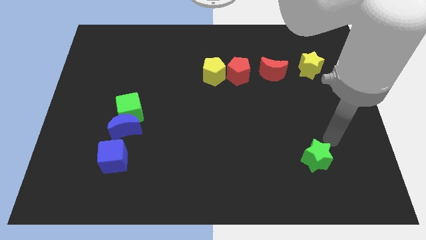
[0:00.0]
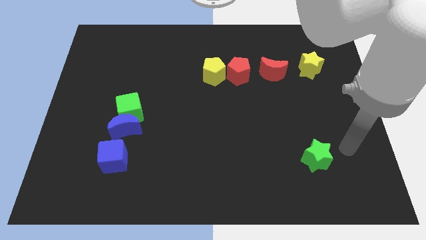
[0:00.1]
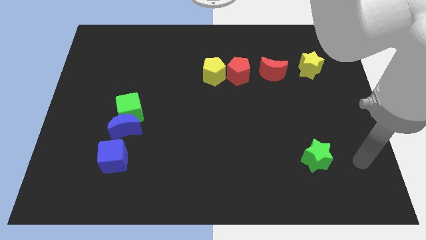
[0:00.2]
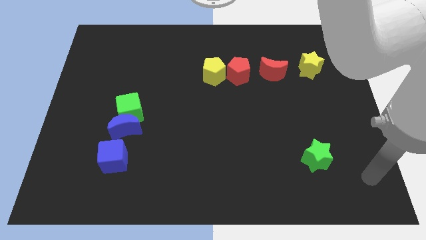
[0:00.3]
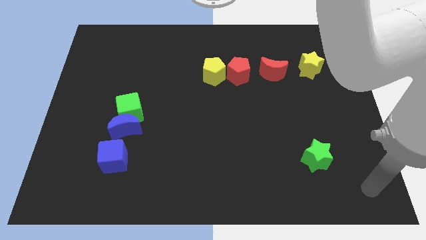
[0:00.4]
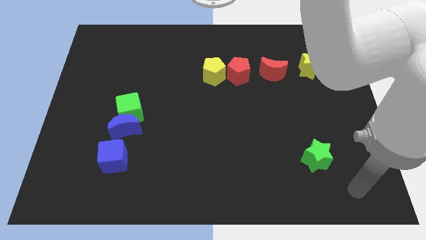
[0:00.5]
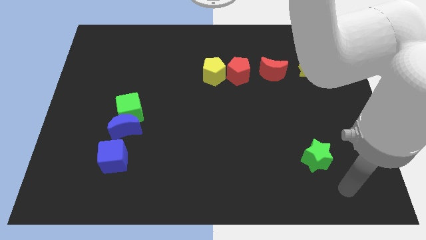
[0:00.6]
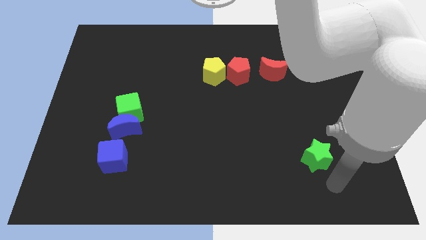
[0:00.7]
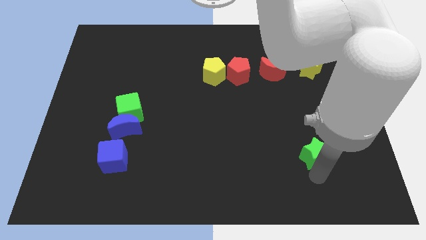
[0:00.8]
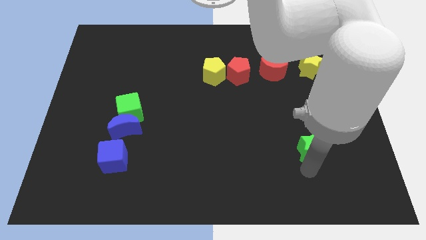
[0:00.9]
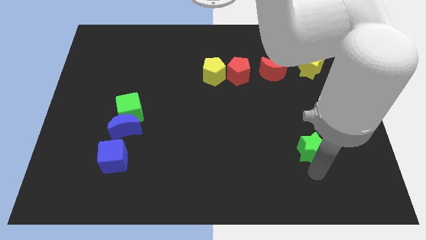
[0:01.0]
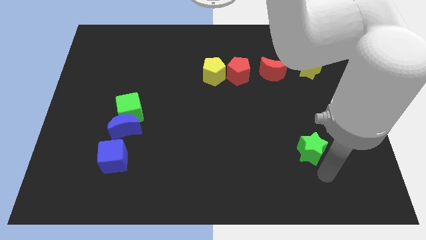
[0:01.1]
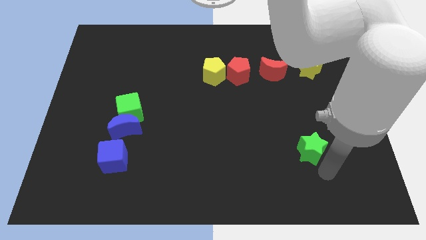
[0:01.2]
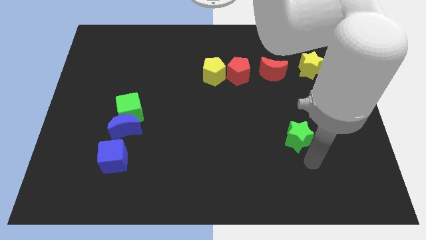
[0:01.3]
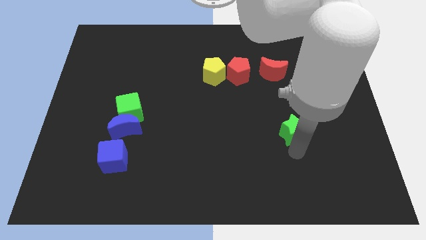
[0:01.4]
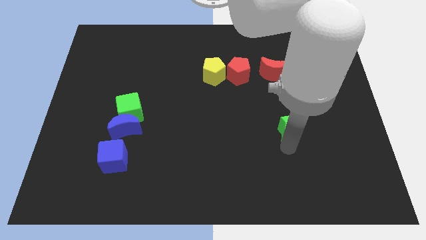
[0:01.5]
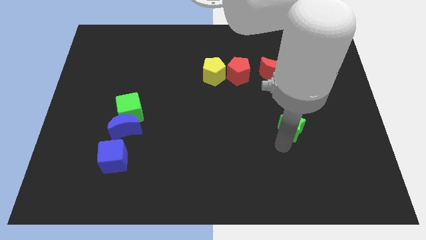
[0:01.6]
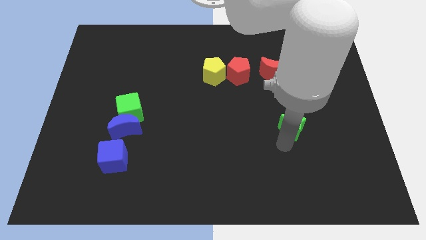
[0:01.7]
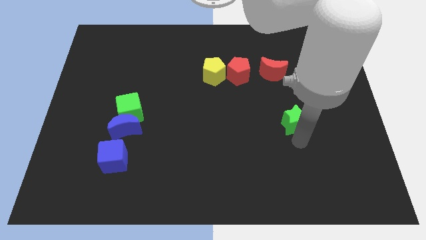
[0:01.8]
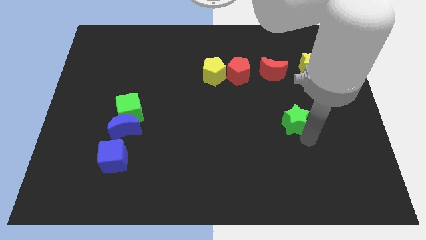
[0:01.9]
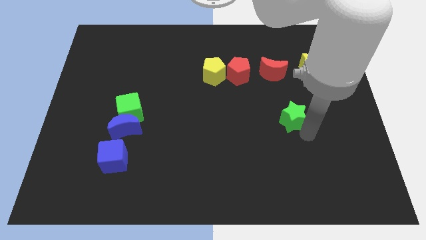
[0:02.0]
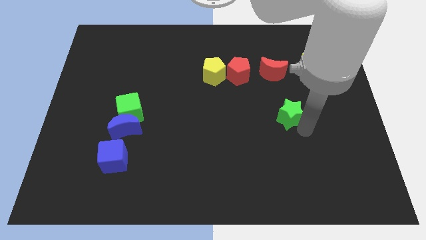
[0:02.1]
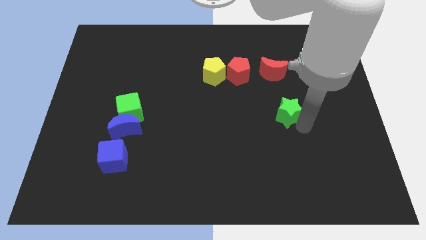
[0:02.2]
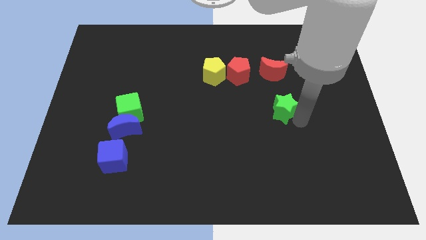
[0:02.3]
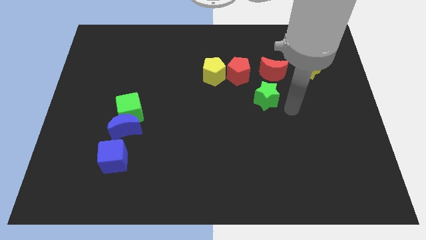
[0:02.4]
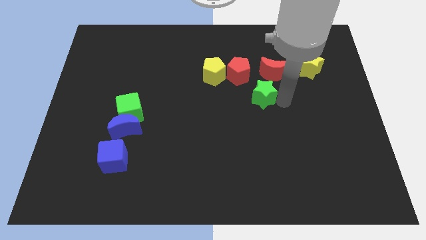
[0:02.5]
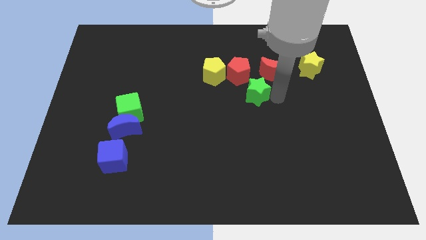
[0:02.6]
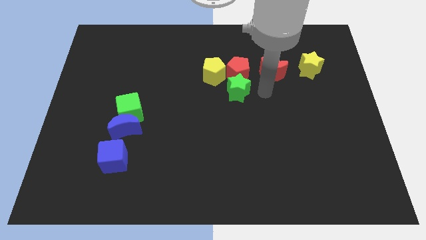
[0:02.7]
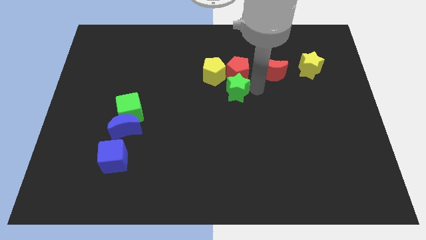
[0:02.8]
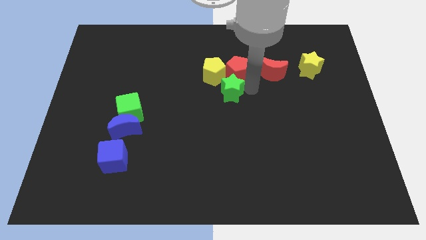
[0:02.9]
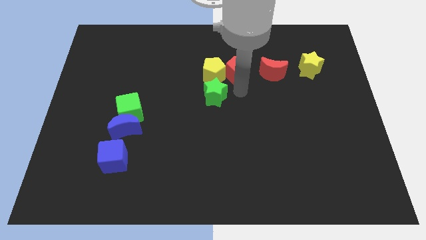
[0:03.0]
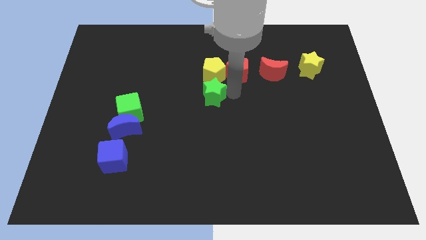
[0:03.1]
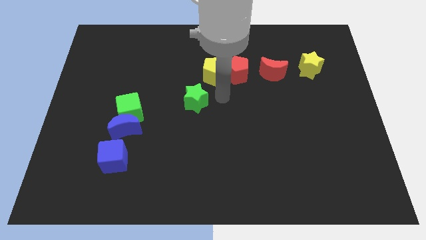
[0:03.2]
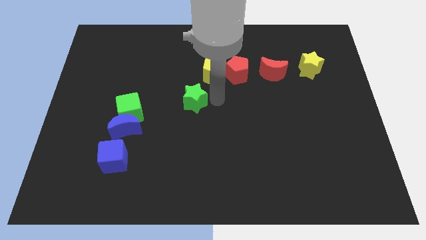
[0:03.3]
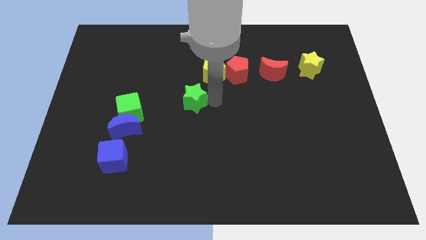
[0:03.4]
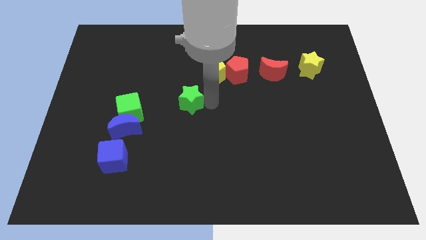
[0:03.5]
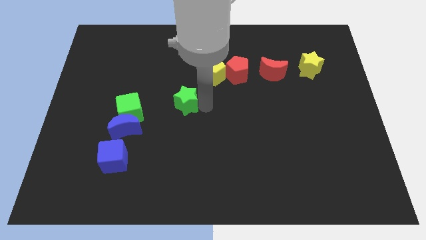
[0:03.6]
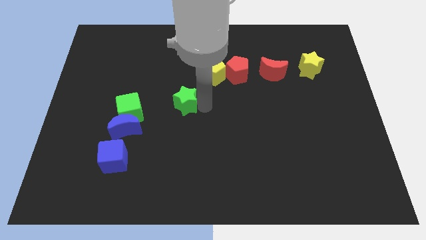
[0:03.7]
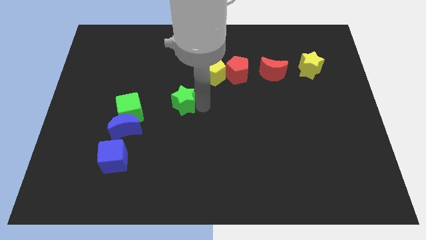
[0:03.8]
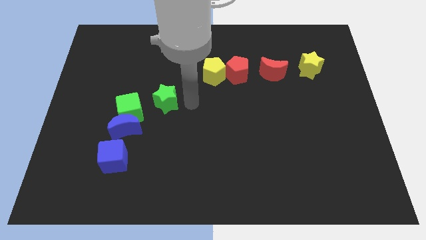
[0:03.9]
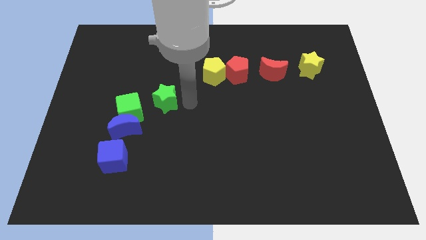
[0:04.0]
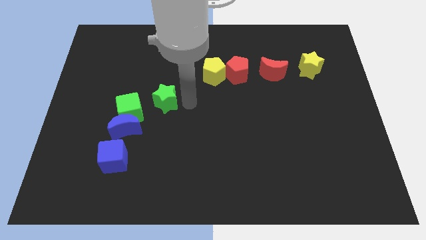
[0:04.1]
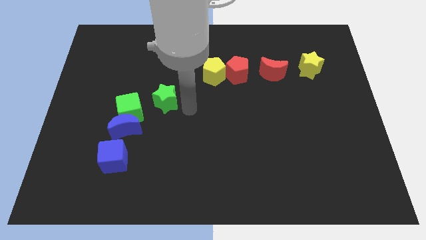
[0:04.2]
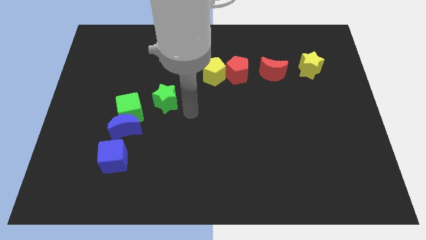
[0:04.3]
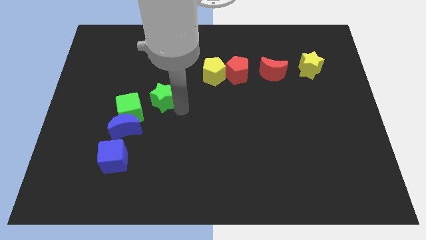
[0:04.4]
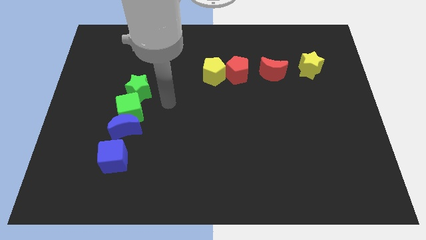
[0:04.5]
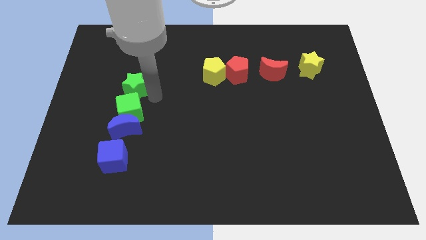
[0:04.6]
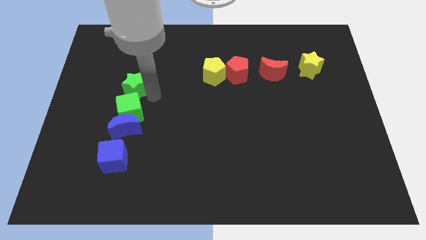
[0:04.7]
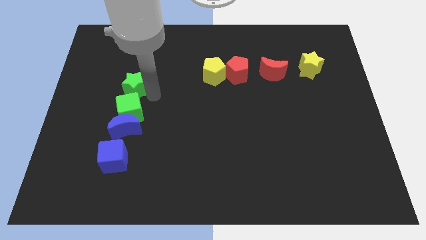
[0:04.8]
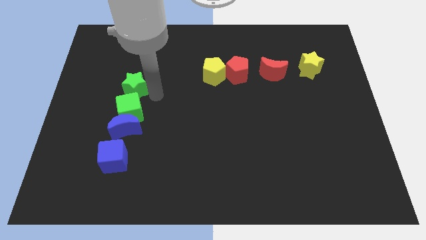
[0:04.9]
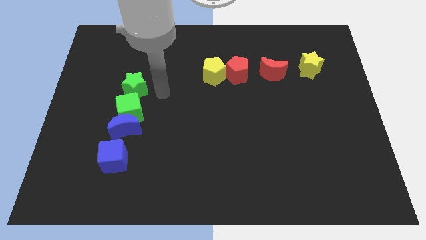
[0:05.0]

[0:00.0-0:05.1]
move the green star to the top of the green cube

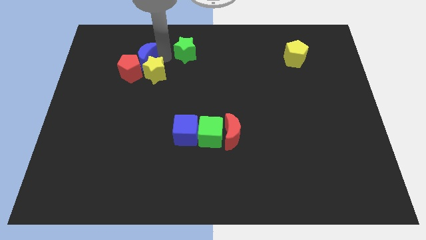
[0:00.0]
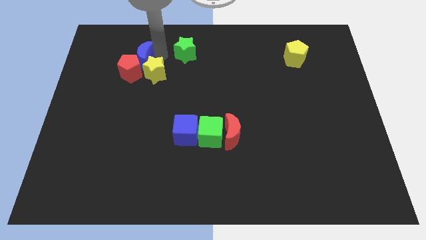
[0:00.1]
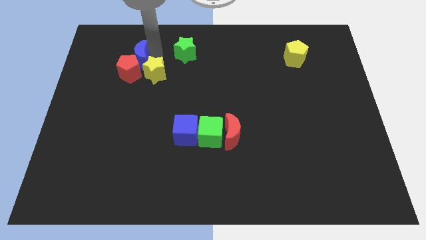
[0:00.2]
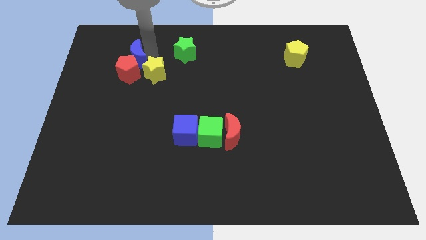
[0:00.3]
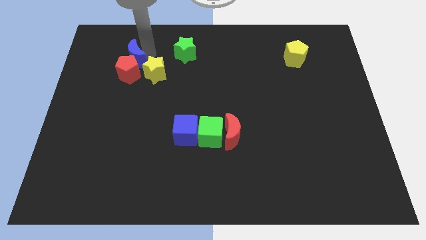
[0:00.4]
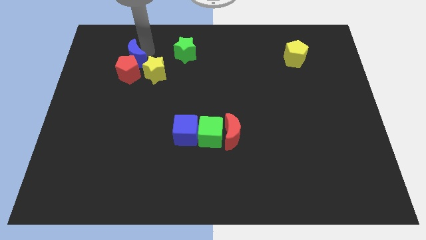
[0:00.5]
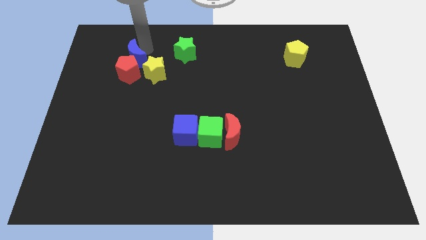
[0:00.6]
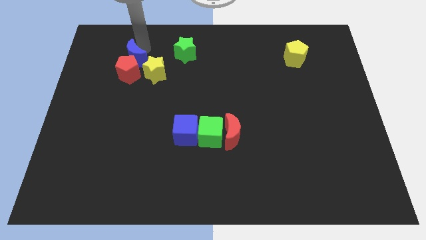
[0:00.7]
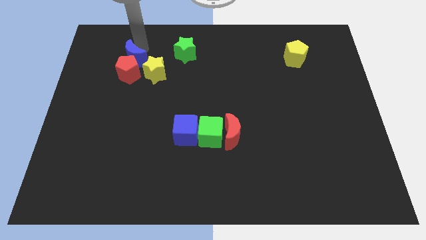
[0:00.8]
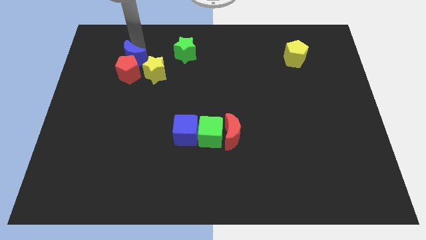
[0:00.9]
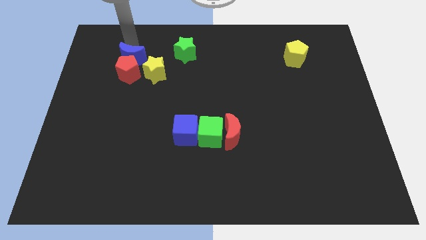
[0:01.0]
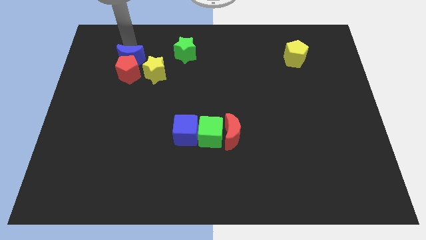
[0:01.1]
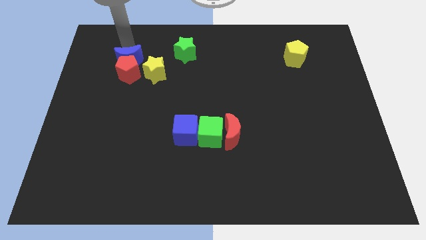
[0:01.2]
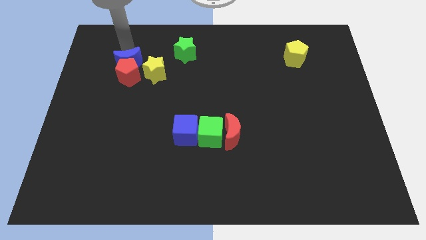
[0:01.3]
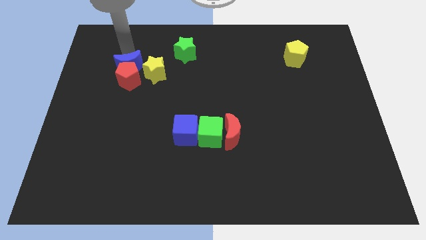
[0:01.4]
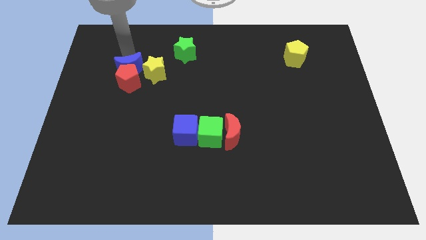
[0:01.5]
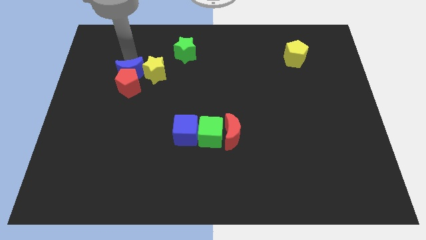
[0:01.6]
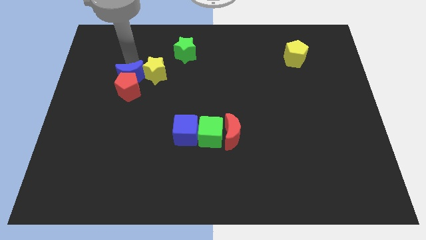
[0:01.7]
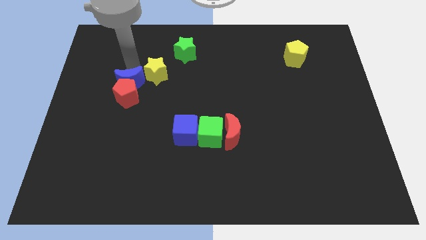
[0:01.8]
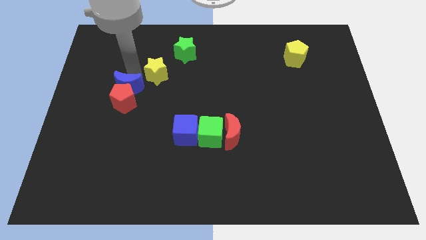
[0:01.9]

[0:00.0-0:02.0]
move the blue moon into the red pentagon

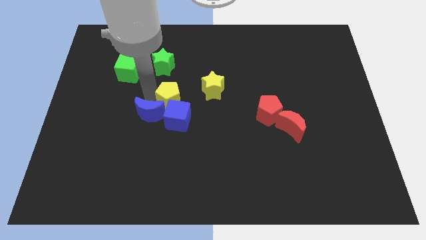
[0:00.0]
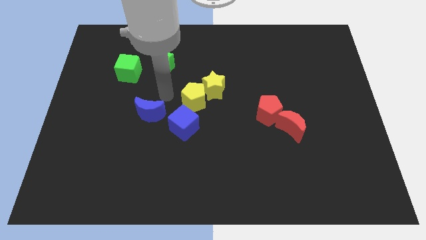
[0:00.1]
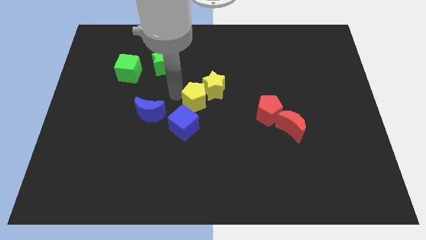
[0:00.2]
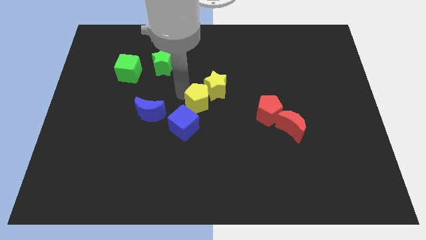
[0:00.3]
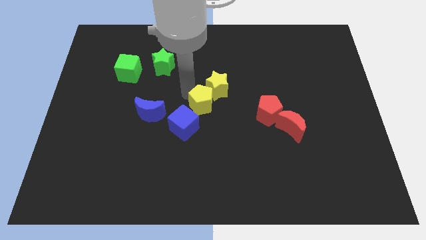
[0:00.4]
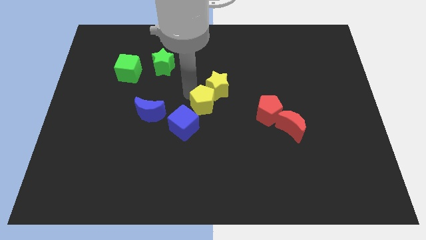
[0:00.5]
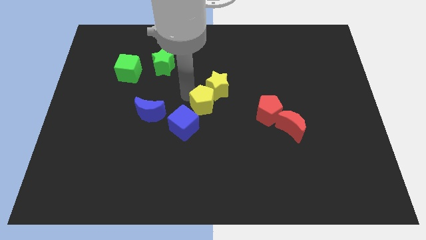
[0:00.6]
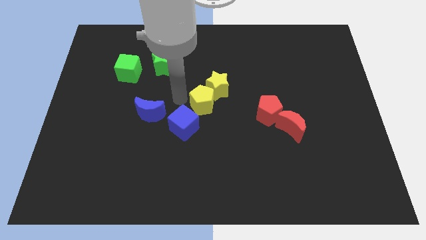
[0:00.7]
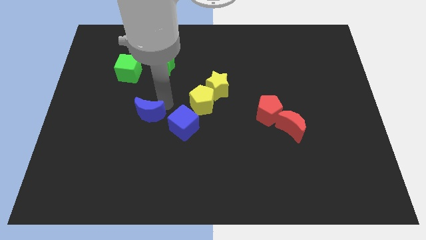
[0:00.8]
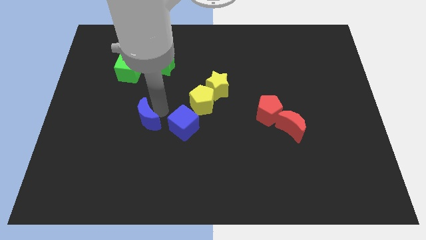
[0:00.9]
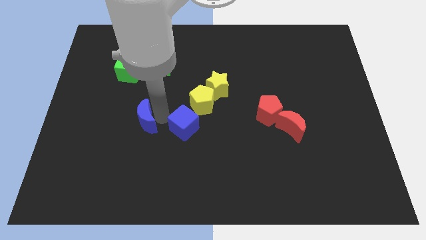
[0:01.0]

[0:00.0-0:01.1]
push the yellow pentagon into the yellow star

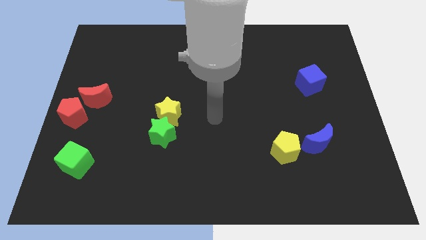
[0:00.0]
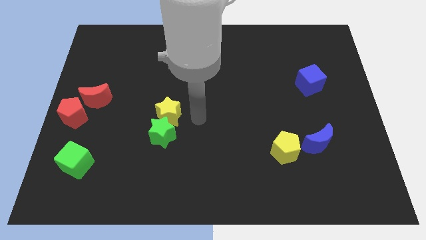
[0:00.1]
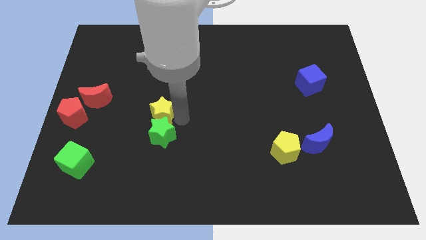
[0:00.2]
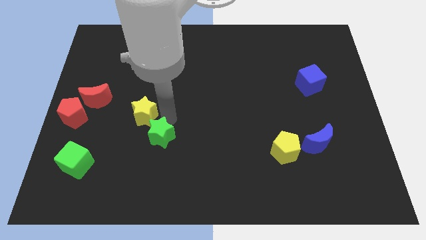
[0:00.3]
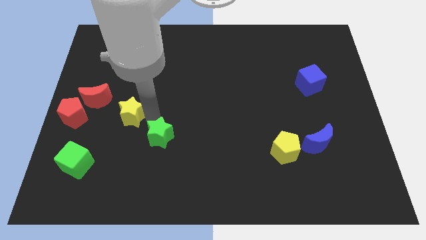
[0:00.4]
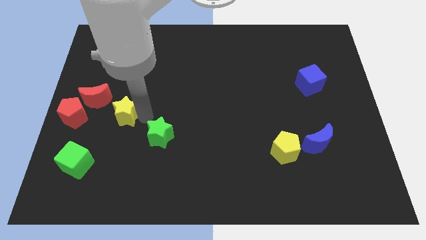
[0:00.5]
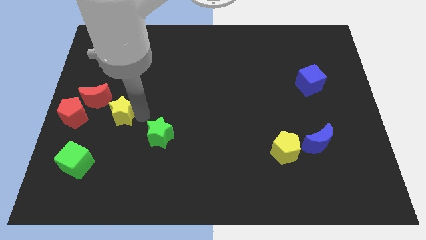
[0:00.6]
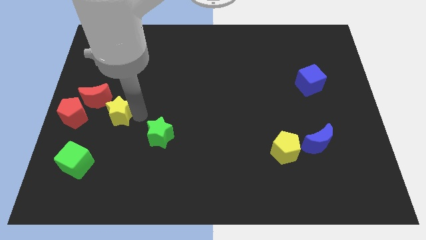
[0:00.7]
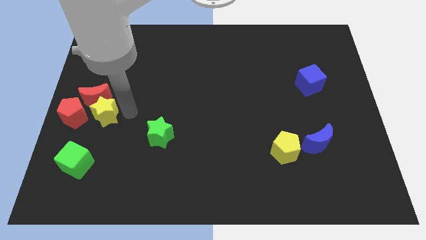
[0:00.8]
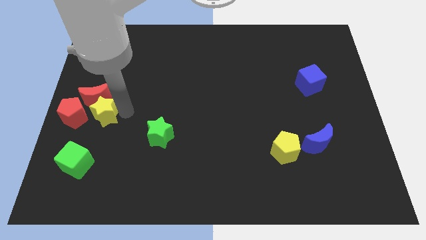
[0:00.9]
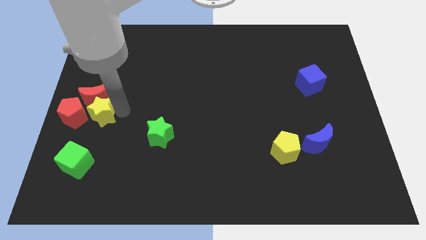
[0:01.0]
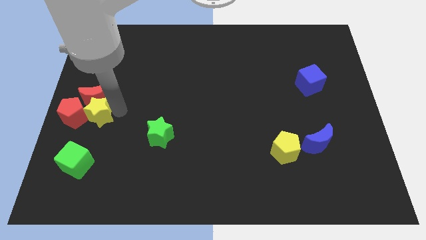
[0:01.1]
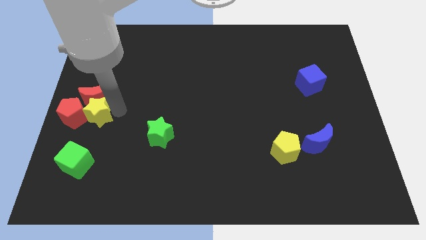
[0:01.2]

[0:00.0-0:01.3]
move the yellow star away from the green star
